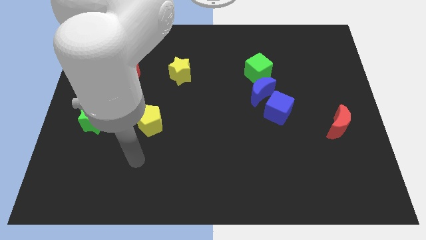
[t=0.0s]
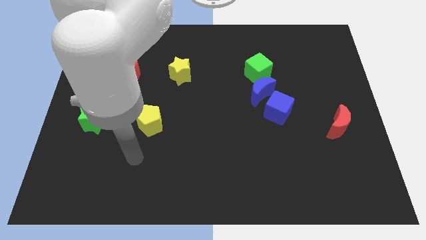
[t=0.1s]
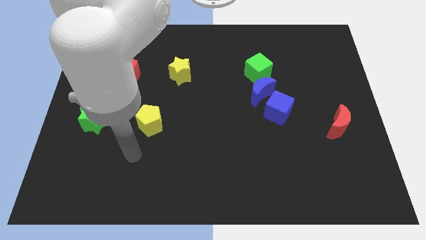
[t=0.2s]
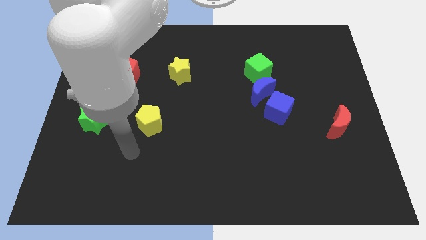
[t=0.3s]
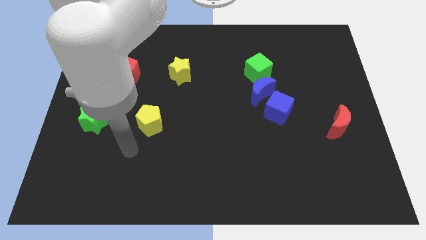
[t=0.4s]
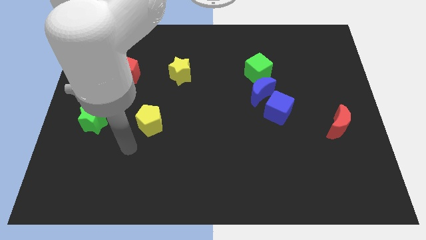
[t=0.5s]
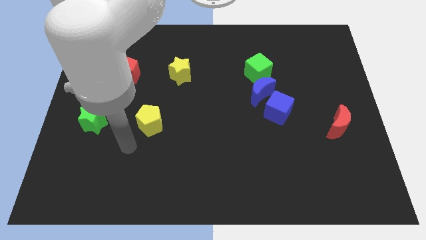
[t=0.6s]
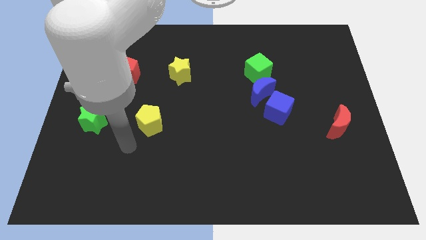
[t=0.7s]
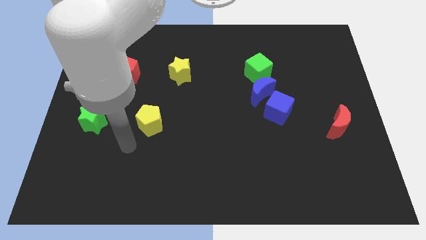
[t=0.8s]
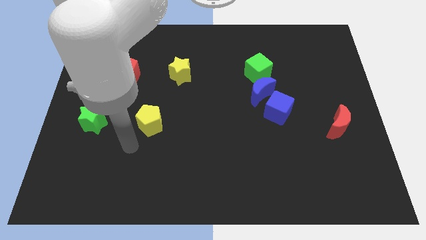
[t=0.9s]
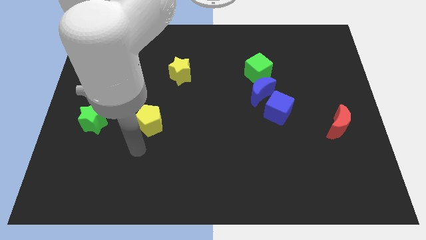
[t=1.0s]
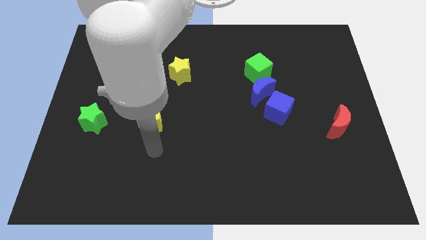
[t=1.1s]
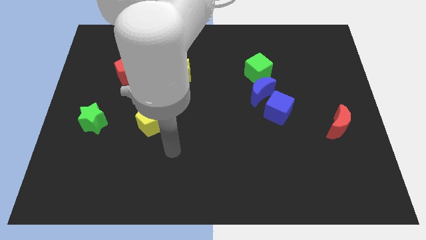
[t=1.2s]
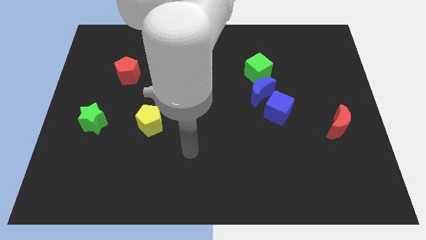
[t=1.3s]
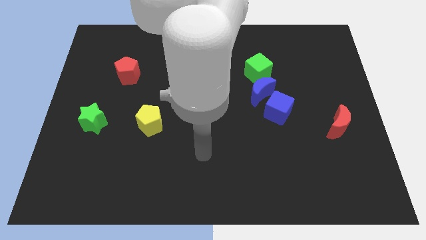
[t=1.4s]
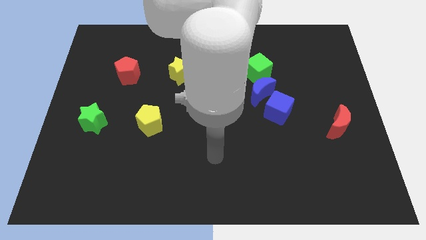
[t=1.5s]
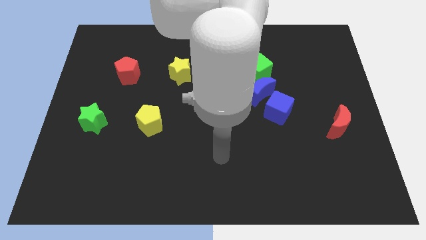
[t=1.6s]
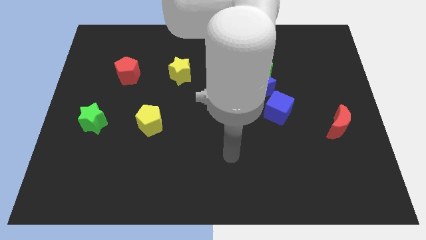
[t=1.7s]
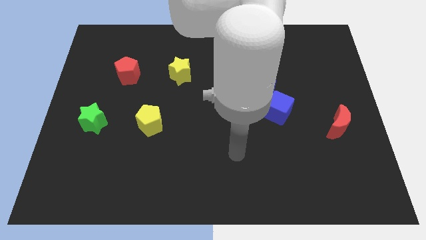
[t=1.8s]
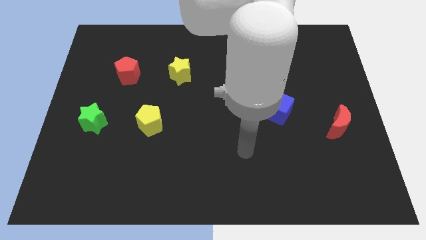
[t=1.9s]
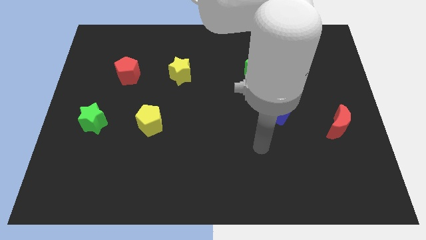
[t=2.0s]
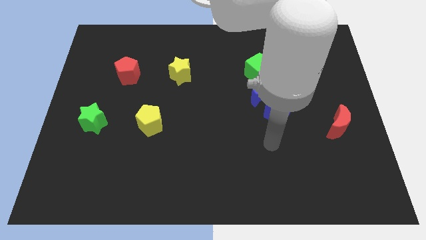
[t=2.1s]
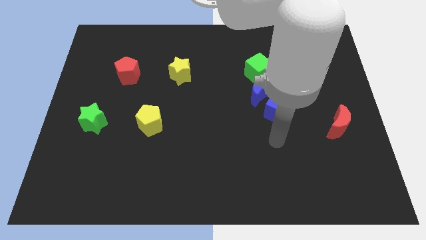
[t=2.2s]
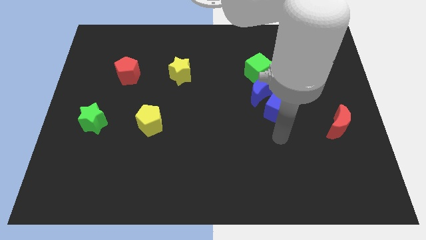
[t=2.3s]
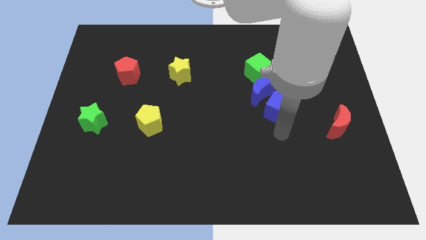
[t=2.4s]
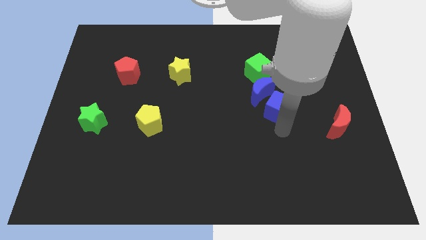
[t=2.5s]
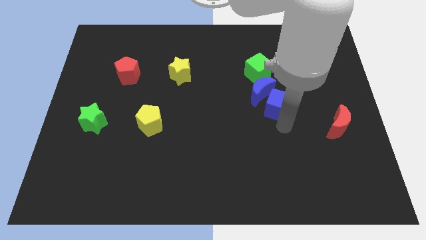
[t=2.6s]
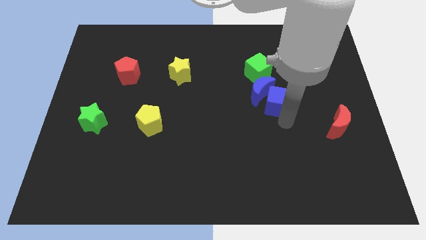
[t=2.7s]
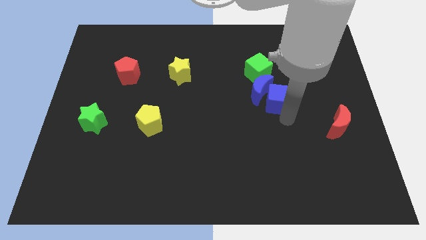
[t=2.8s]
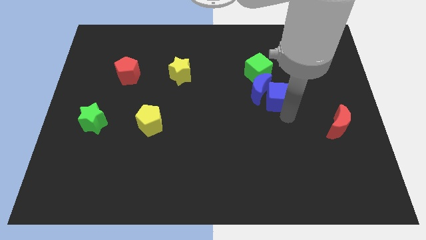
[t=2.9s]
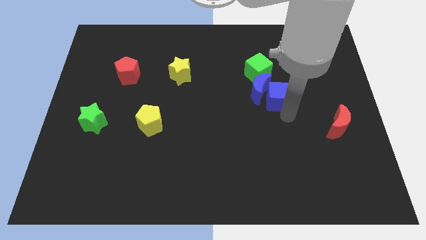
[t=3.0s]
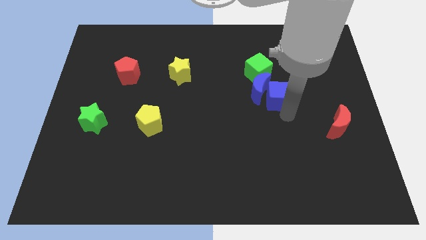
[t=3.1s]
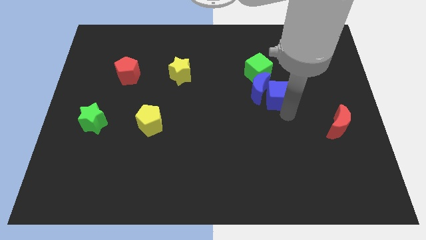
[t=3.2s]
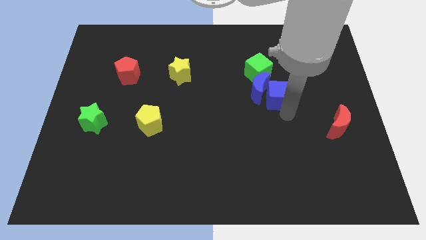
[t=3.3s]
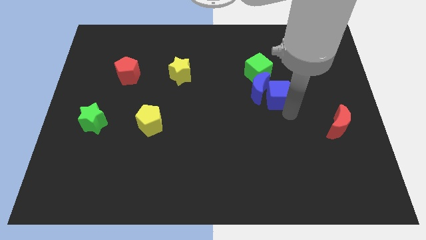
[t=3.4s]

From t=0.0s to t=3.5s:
push blue blocks towards the the top side of the board

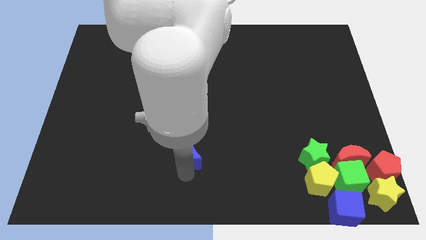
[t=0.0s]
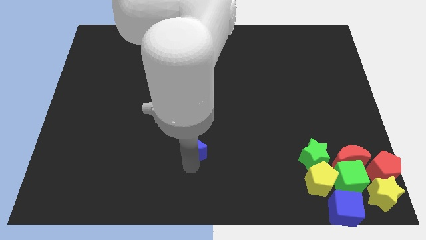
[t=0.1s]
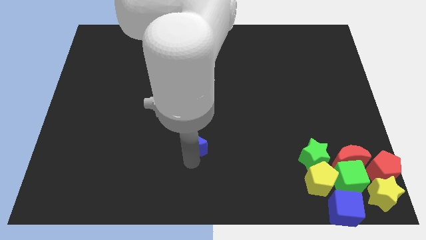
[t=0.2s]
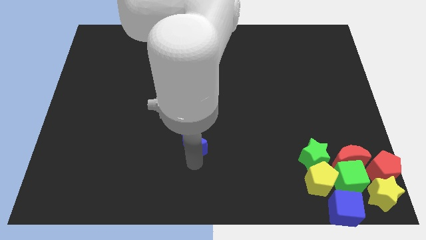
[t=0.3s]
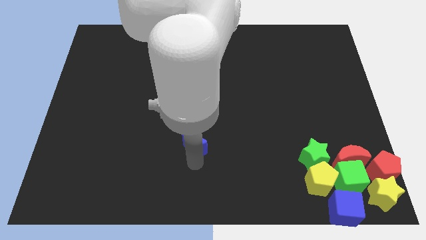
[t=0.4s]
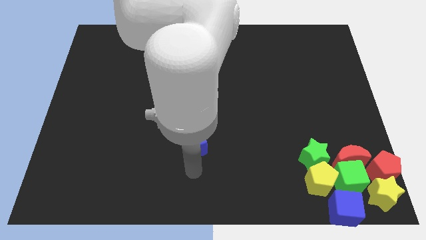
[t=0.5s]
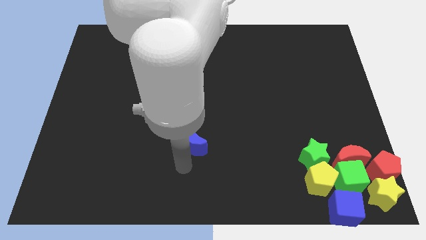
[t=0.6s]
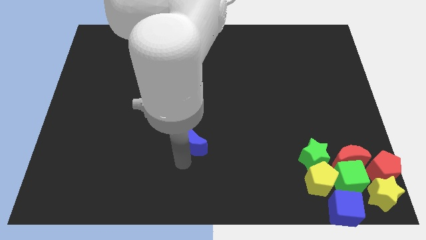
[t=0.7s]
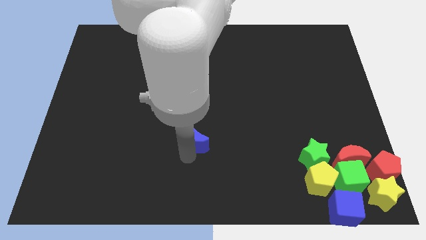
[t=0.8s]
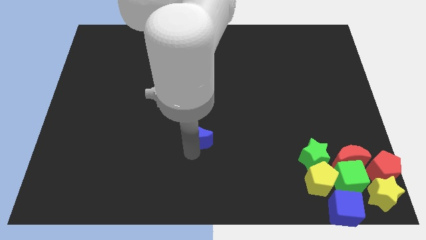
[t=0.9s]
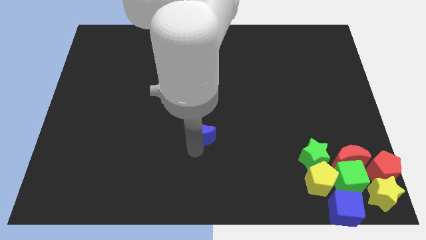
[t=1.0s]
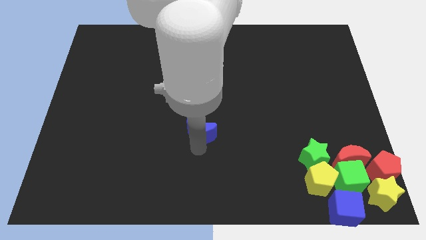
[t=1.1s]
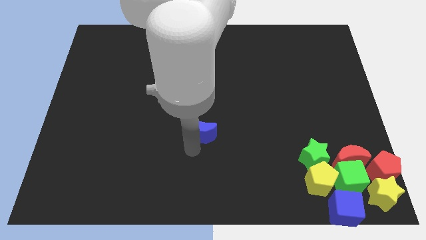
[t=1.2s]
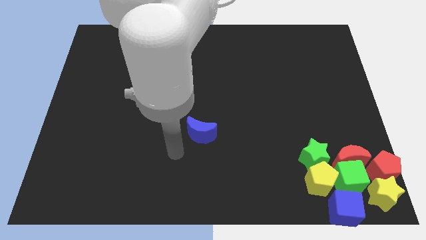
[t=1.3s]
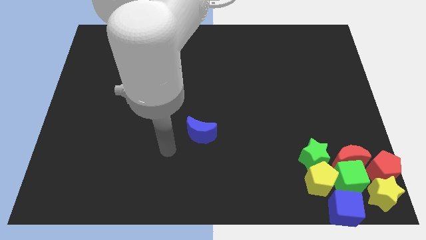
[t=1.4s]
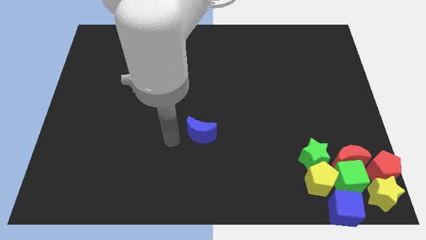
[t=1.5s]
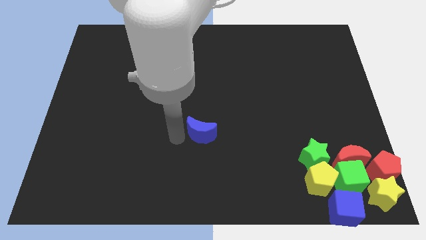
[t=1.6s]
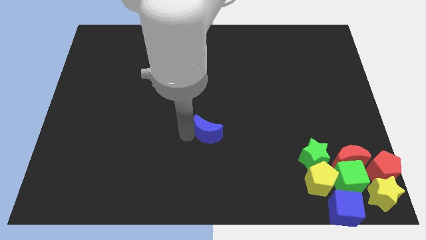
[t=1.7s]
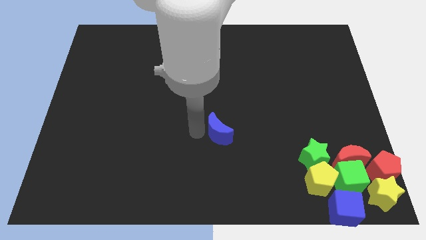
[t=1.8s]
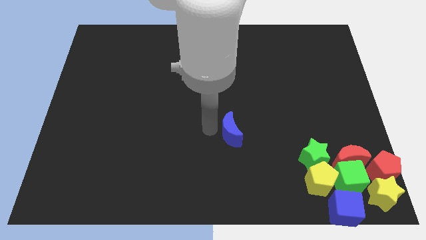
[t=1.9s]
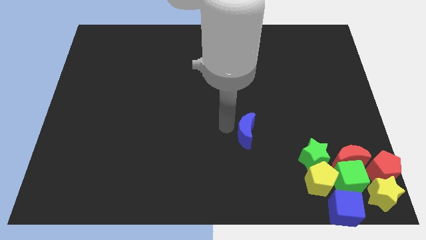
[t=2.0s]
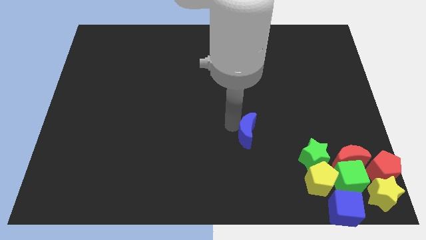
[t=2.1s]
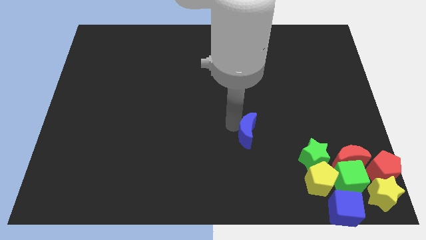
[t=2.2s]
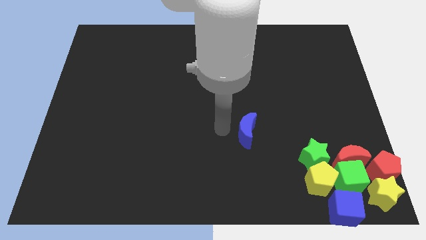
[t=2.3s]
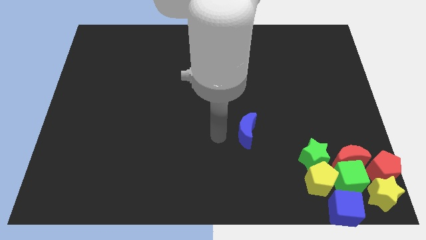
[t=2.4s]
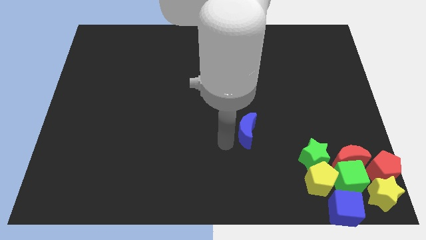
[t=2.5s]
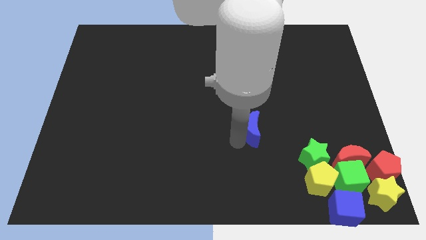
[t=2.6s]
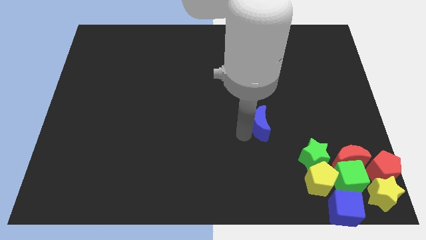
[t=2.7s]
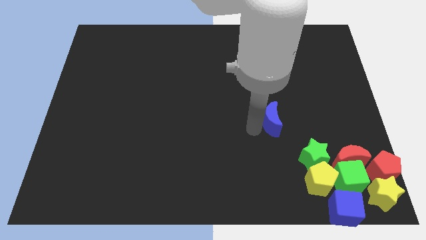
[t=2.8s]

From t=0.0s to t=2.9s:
move the blue crescent diagonally left of the green star

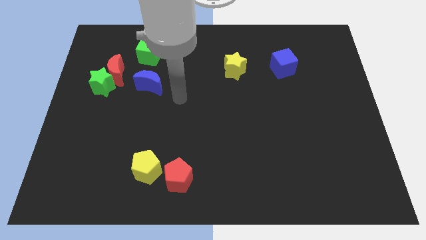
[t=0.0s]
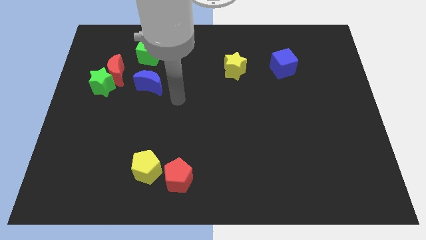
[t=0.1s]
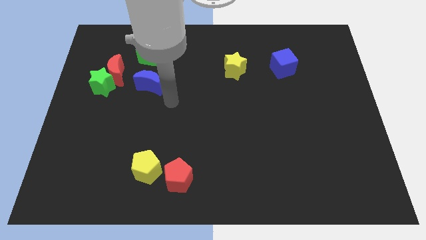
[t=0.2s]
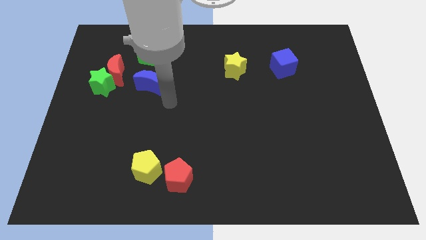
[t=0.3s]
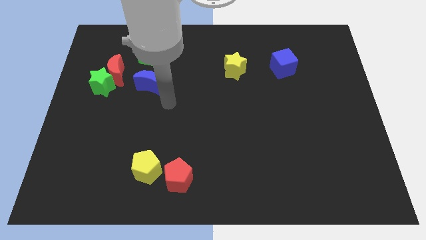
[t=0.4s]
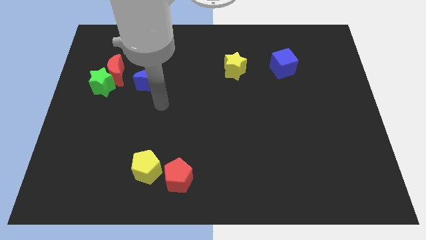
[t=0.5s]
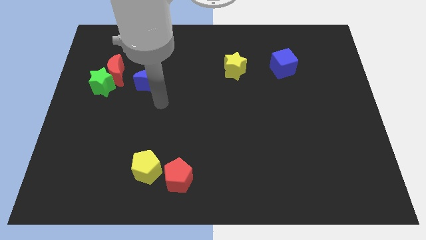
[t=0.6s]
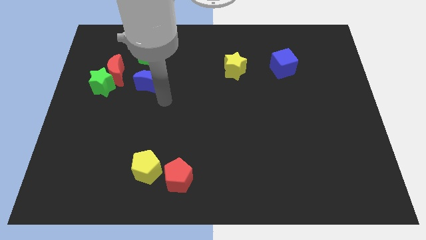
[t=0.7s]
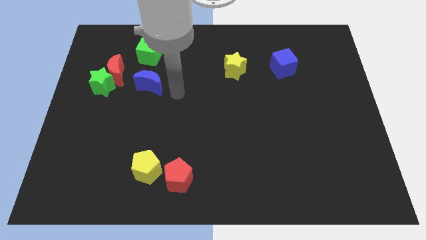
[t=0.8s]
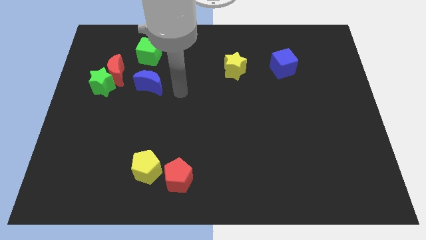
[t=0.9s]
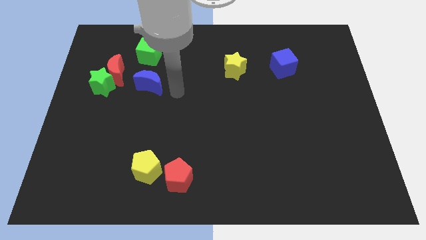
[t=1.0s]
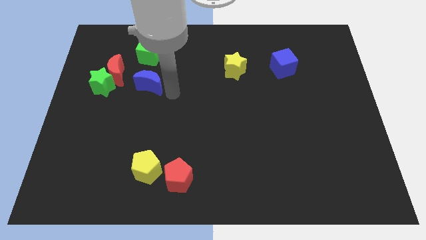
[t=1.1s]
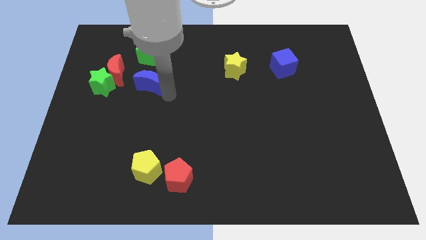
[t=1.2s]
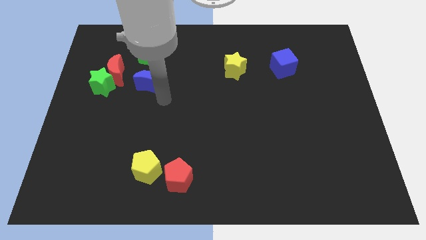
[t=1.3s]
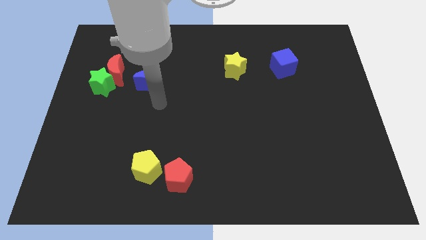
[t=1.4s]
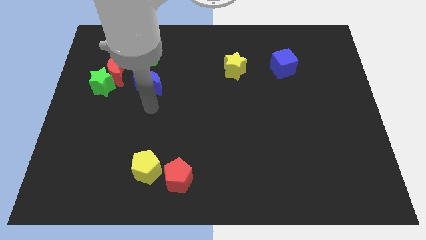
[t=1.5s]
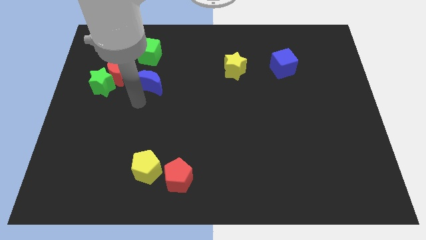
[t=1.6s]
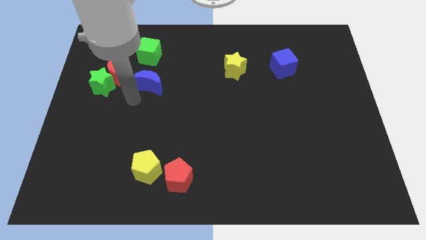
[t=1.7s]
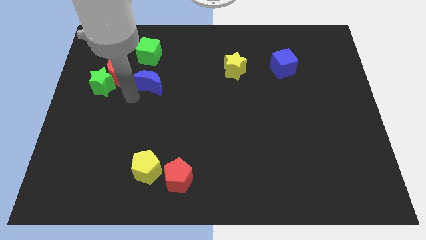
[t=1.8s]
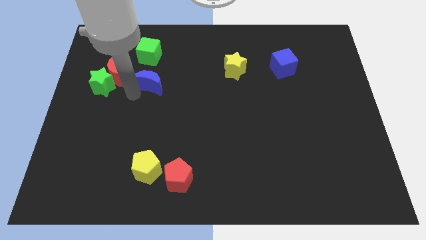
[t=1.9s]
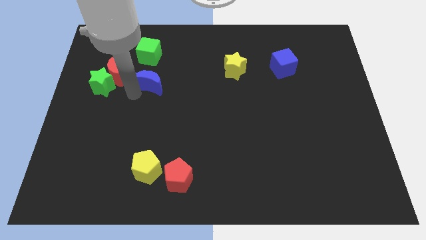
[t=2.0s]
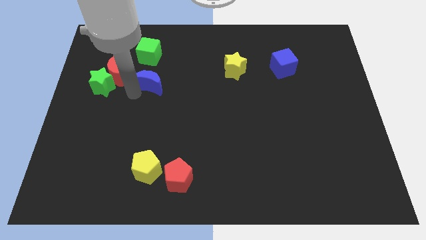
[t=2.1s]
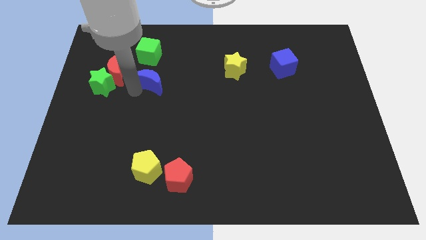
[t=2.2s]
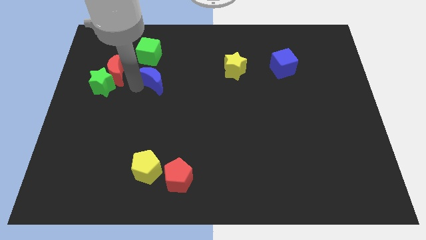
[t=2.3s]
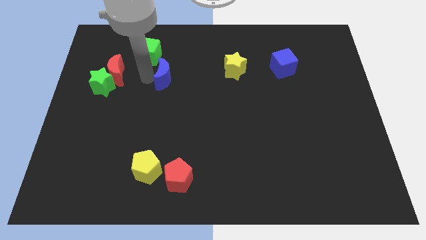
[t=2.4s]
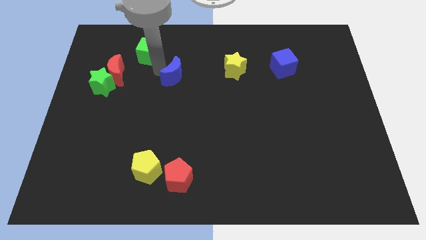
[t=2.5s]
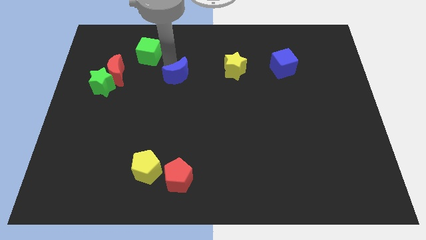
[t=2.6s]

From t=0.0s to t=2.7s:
place the blue crescent in between the red crescent and yellow star
